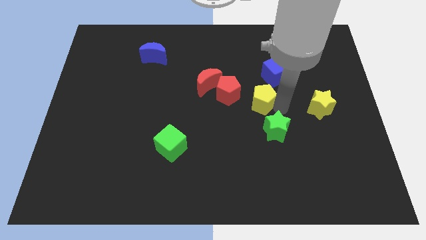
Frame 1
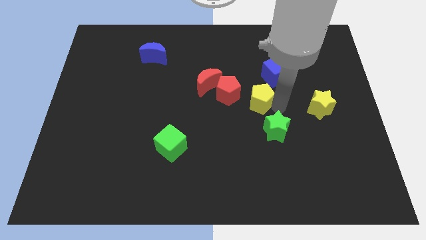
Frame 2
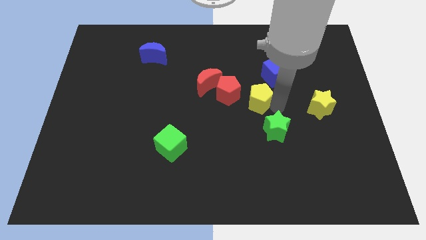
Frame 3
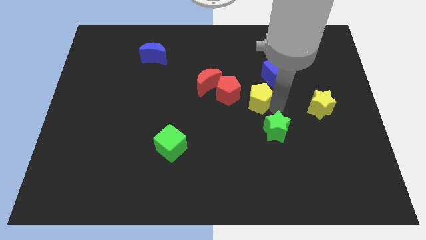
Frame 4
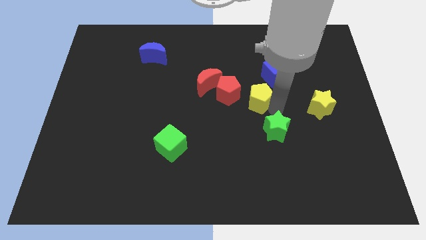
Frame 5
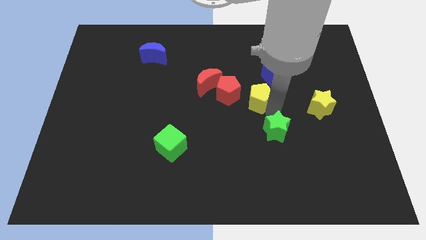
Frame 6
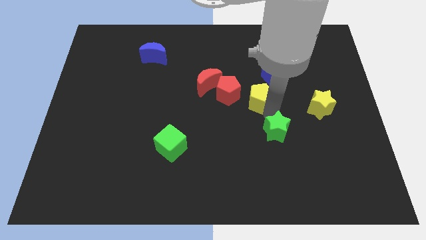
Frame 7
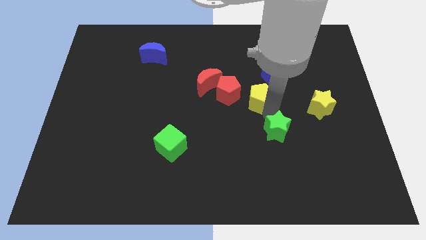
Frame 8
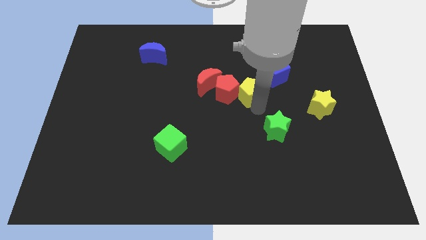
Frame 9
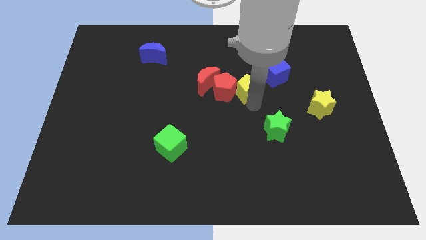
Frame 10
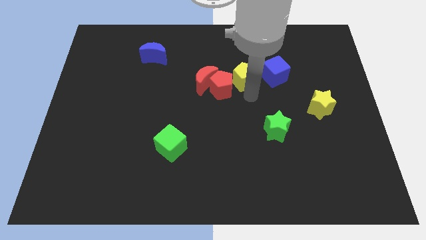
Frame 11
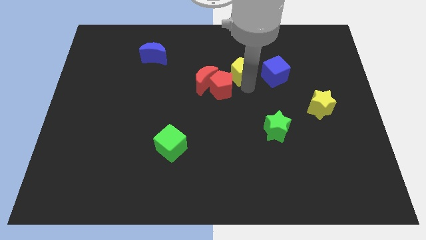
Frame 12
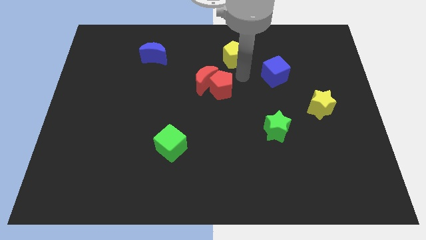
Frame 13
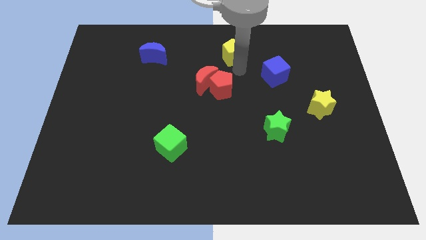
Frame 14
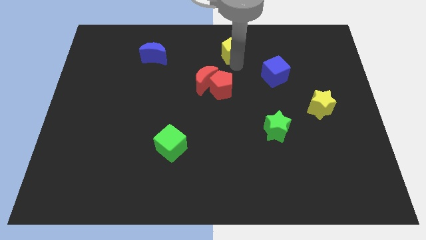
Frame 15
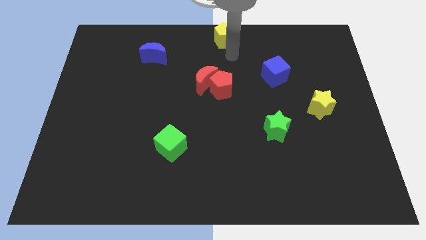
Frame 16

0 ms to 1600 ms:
put the yellow pentagon at the top center of the board

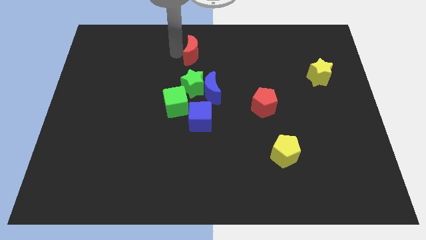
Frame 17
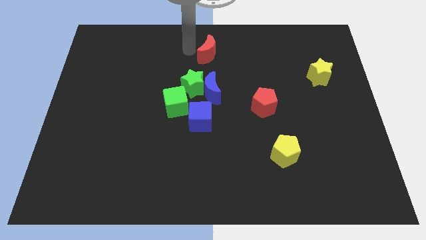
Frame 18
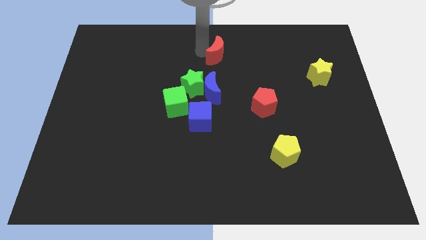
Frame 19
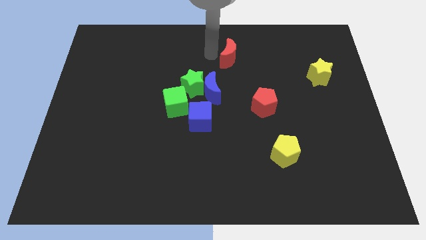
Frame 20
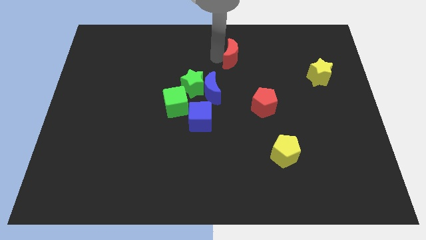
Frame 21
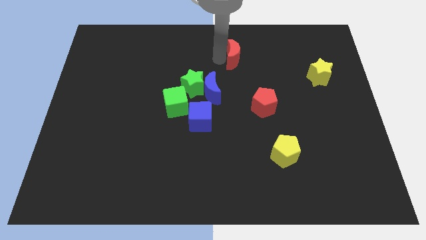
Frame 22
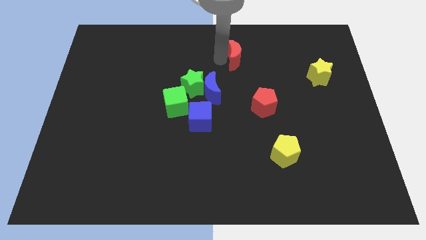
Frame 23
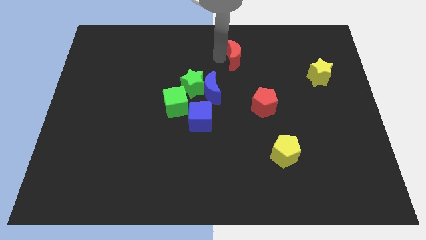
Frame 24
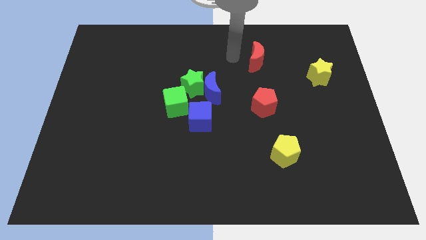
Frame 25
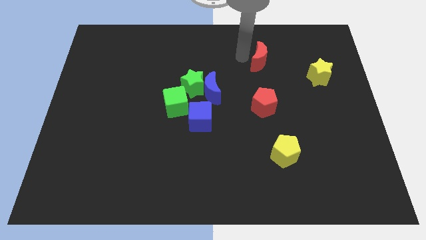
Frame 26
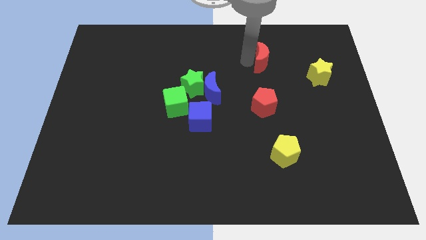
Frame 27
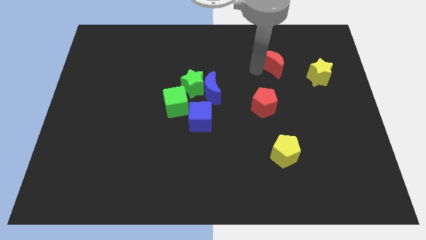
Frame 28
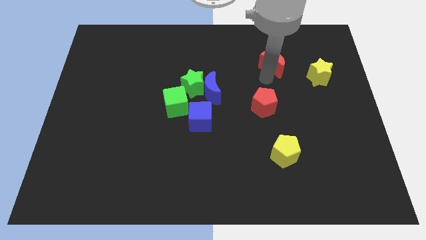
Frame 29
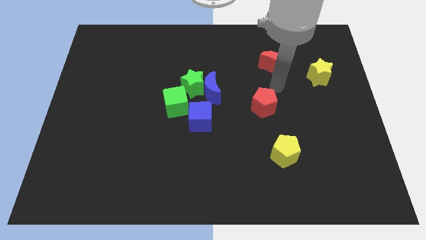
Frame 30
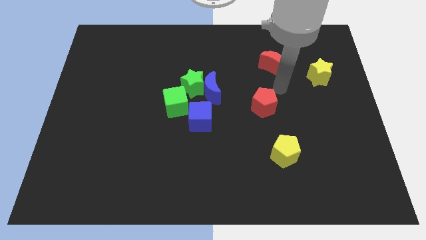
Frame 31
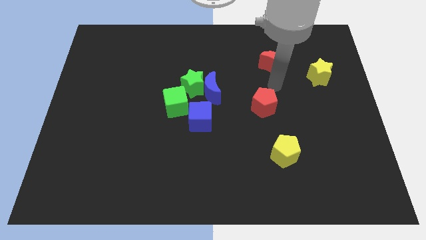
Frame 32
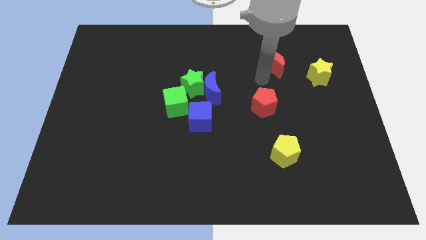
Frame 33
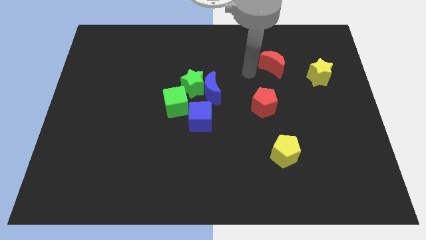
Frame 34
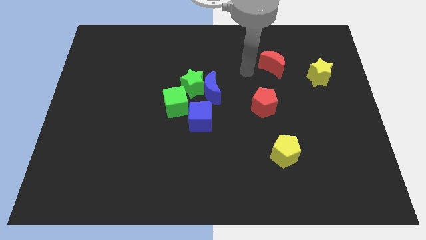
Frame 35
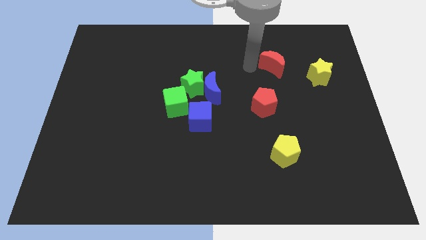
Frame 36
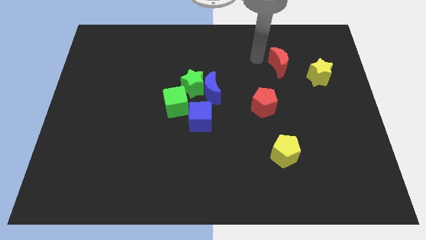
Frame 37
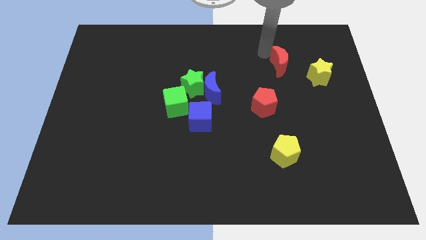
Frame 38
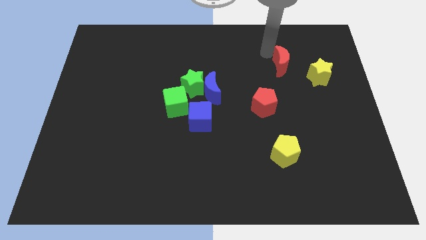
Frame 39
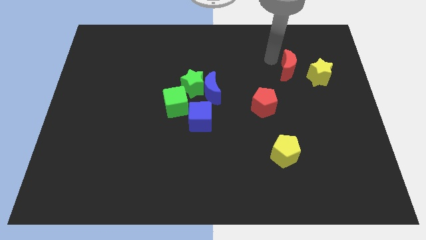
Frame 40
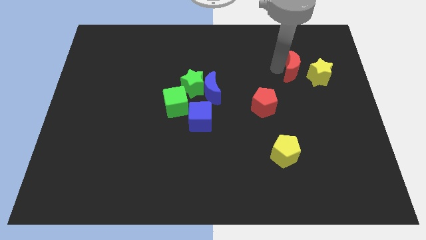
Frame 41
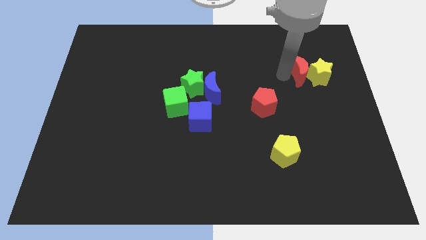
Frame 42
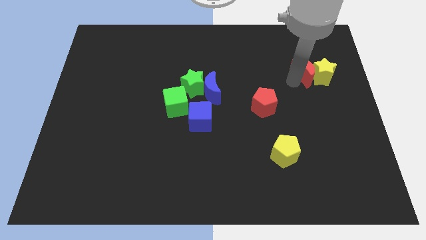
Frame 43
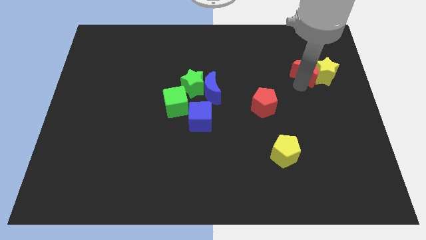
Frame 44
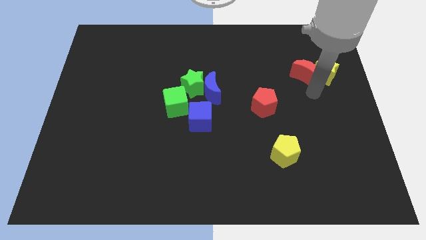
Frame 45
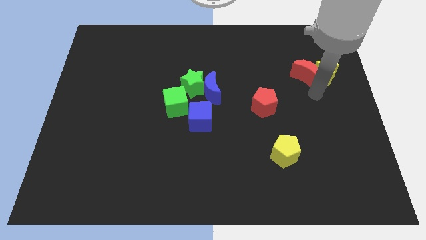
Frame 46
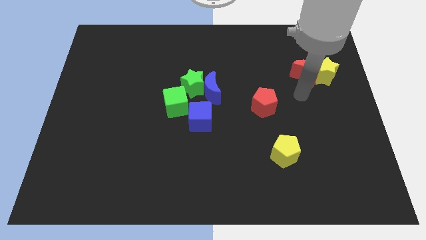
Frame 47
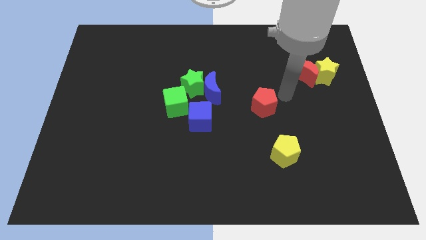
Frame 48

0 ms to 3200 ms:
push the red crescent into yellow star

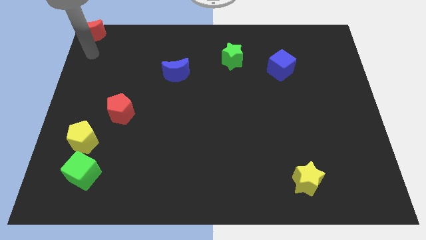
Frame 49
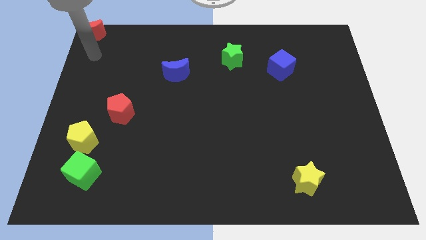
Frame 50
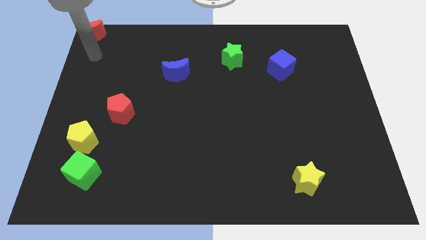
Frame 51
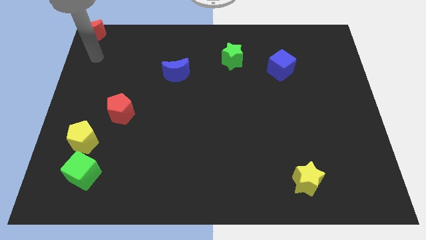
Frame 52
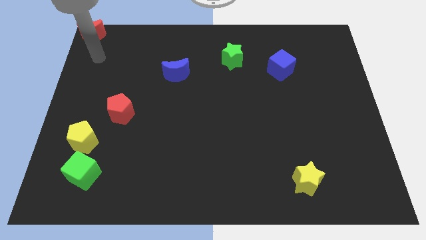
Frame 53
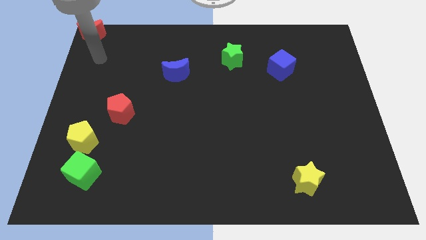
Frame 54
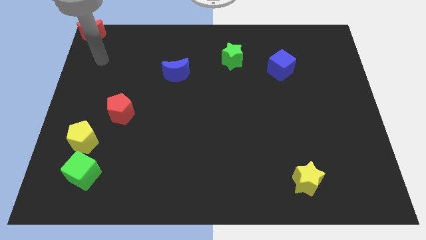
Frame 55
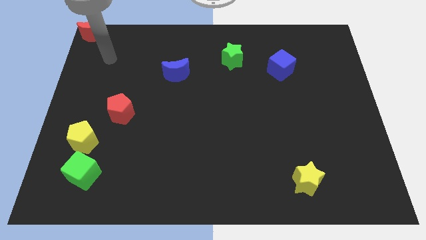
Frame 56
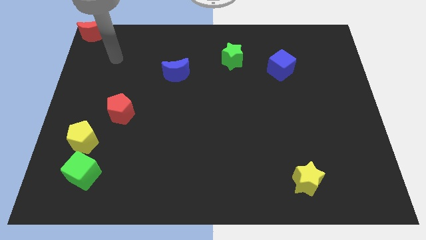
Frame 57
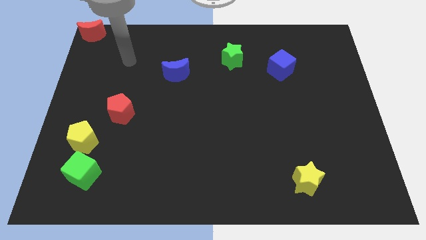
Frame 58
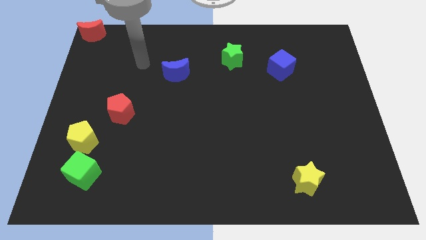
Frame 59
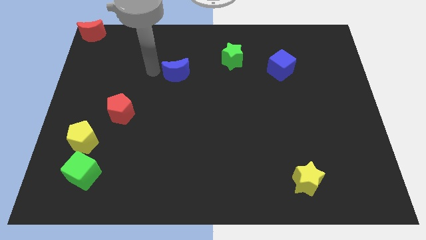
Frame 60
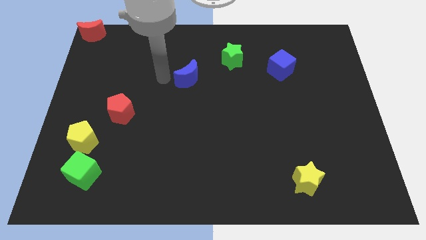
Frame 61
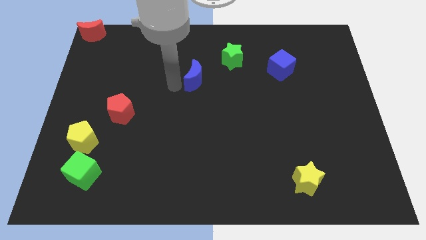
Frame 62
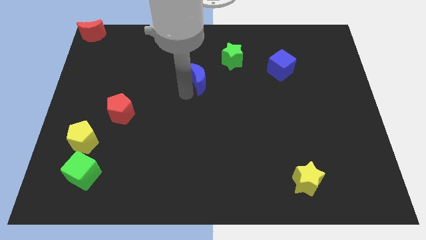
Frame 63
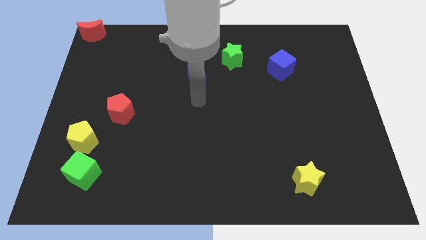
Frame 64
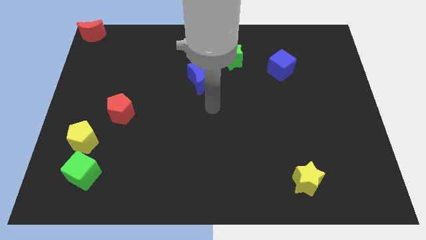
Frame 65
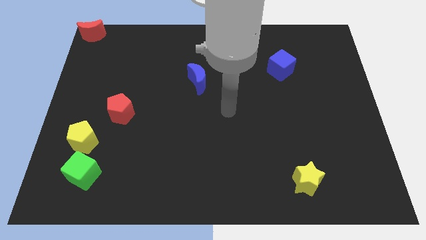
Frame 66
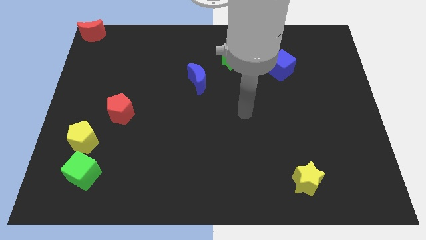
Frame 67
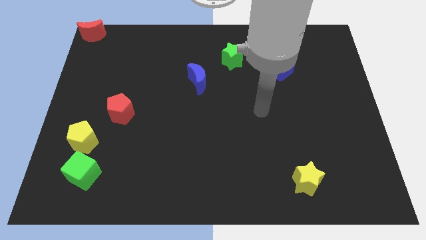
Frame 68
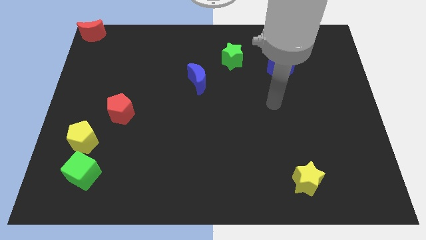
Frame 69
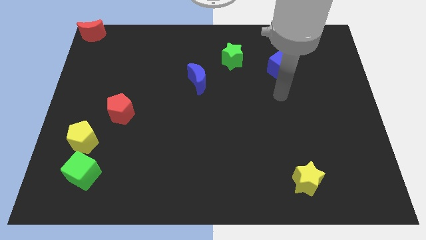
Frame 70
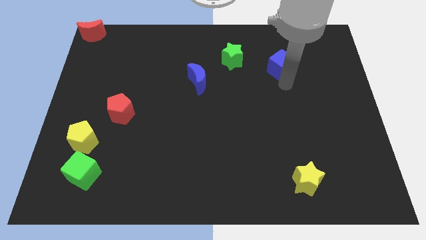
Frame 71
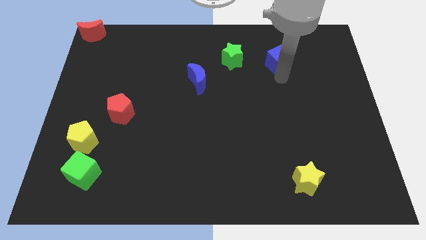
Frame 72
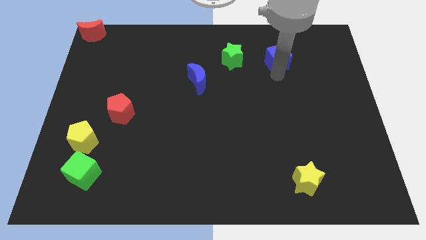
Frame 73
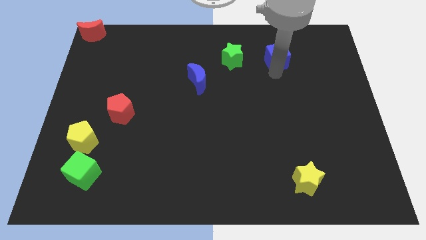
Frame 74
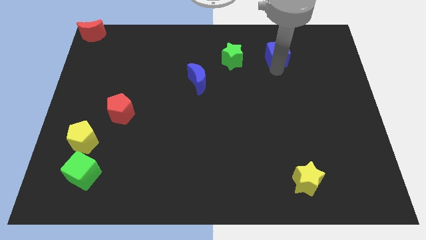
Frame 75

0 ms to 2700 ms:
move your arm away from red moon

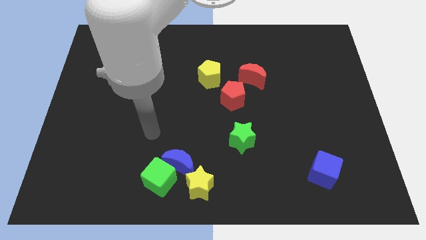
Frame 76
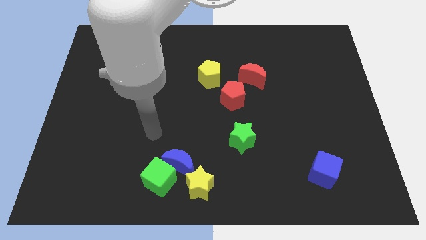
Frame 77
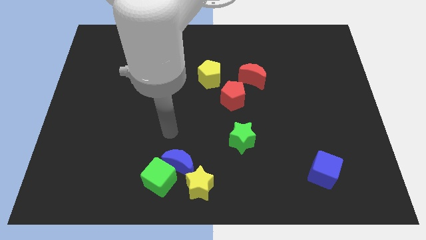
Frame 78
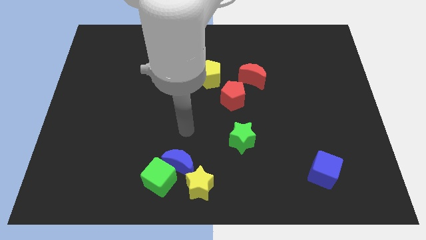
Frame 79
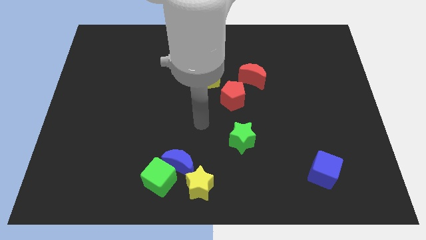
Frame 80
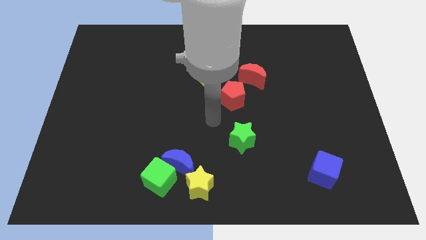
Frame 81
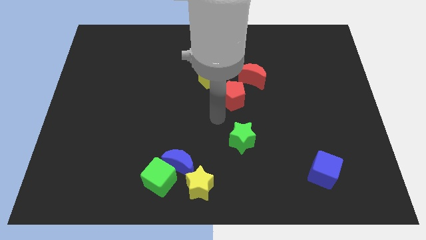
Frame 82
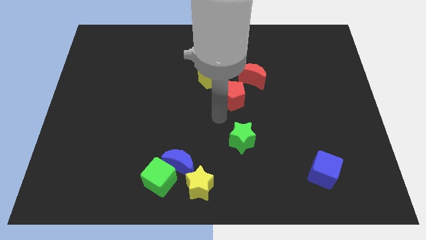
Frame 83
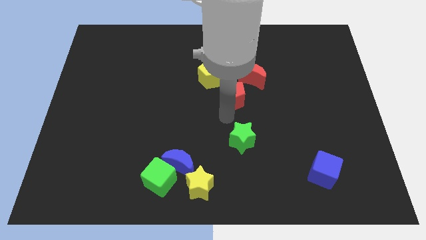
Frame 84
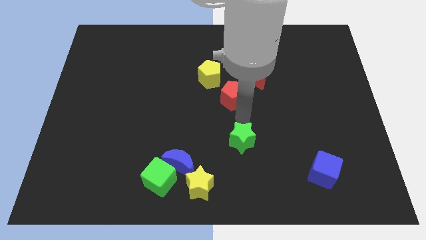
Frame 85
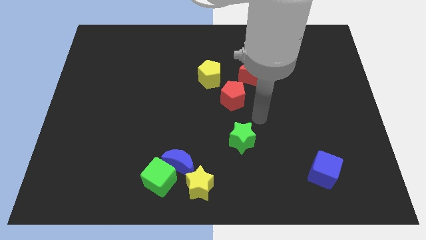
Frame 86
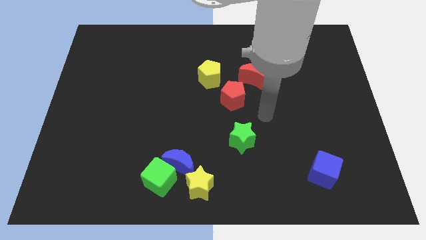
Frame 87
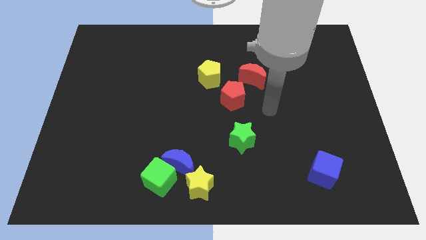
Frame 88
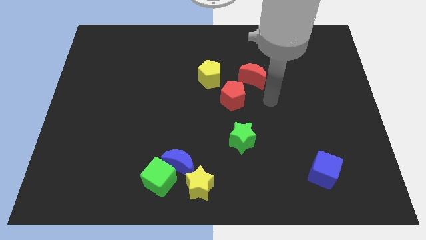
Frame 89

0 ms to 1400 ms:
point your arm at the right of the red pentagon
